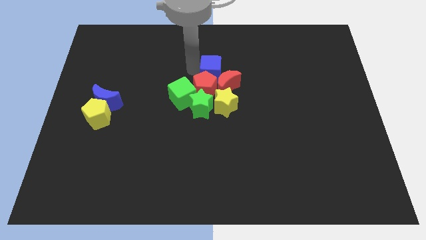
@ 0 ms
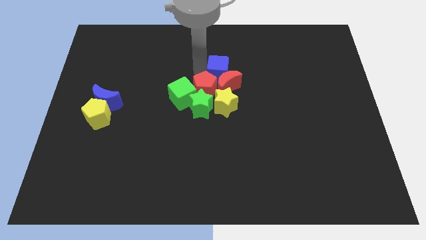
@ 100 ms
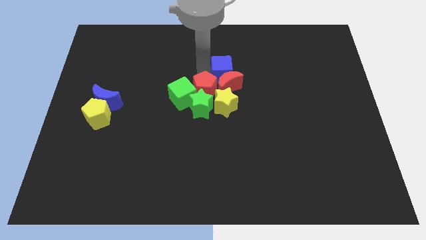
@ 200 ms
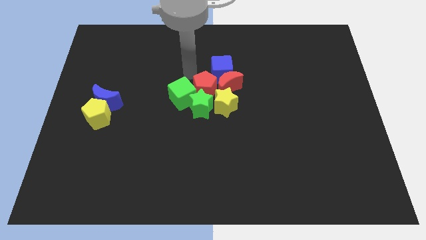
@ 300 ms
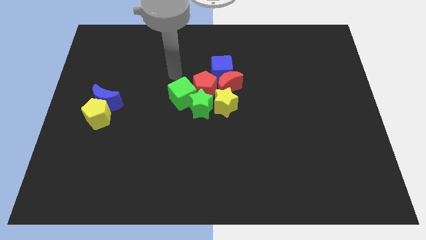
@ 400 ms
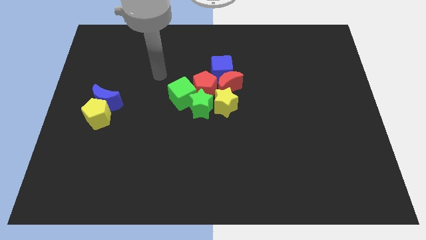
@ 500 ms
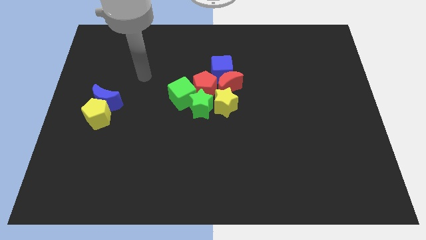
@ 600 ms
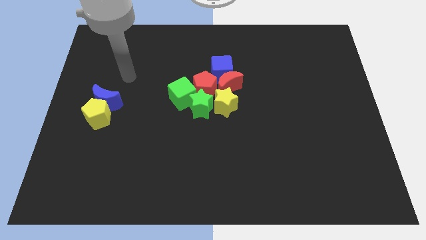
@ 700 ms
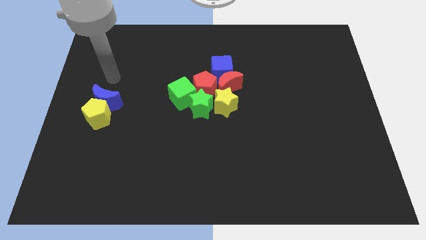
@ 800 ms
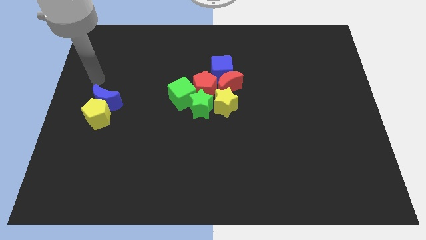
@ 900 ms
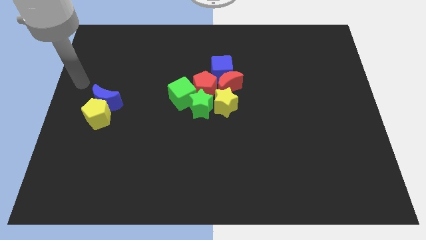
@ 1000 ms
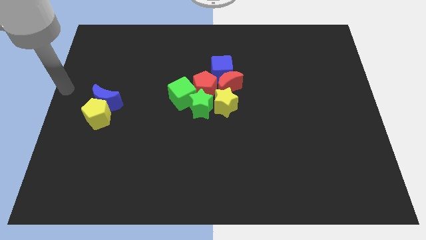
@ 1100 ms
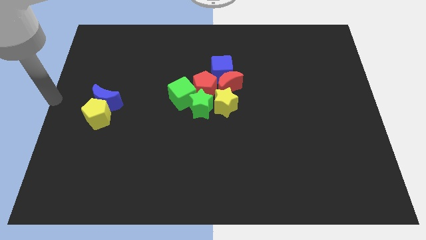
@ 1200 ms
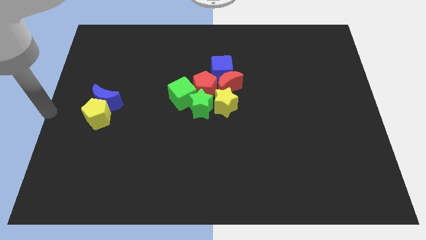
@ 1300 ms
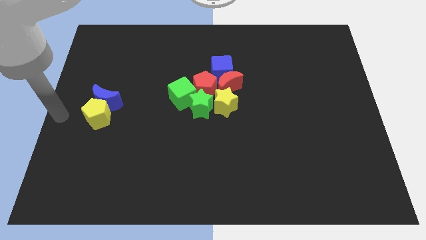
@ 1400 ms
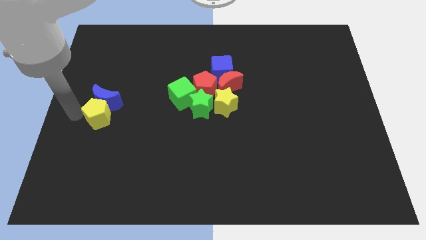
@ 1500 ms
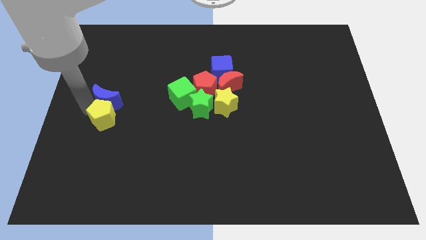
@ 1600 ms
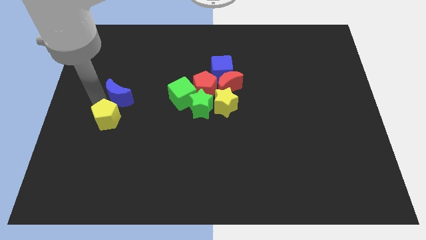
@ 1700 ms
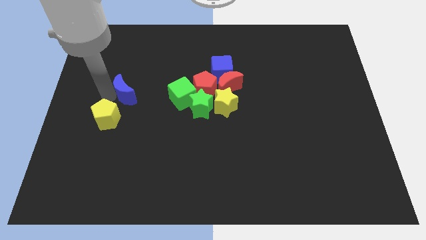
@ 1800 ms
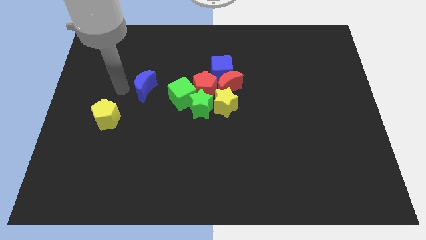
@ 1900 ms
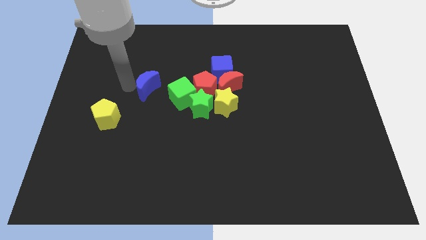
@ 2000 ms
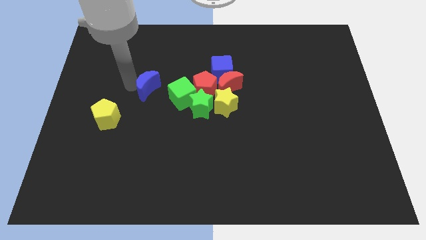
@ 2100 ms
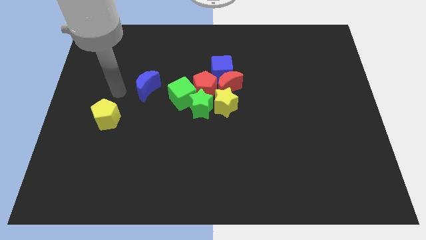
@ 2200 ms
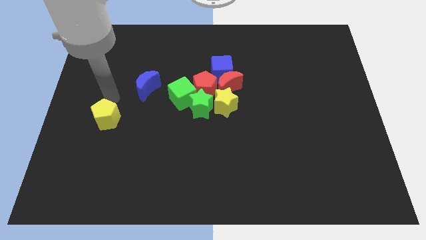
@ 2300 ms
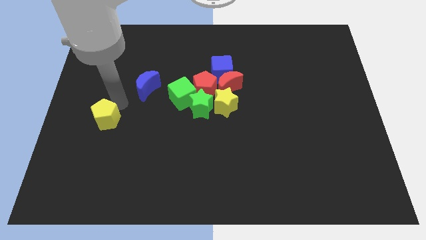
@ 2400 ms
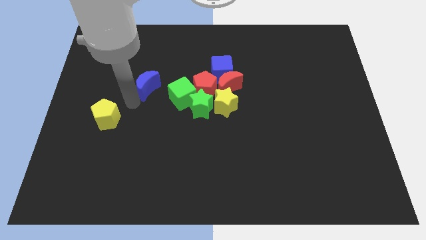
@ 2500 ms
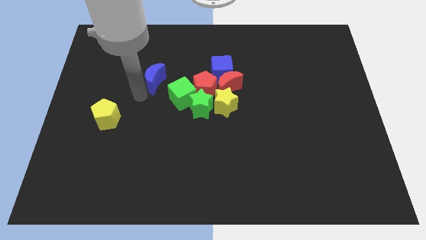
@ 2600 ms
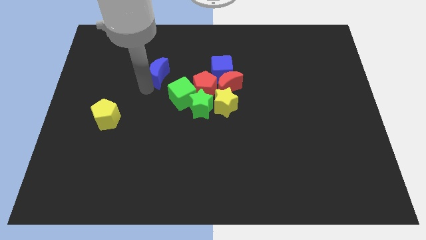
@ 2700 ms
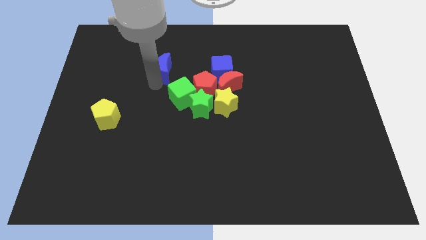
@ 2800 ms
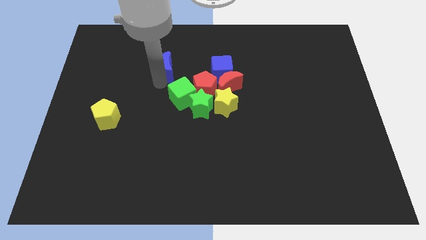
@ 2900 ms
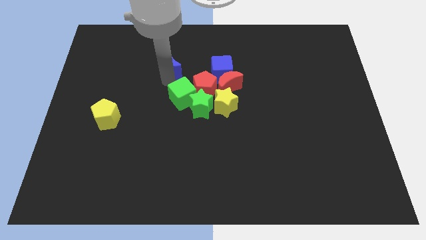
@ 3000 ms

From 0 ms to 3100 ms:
push the blue moon to the top side of the green cube

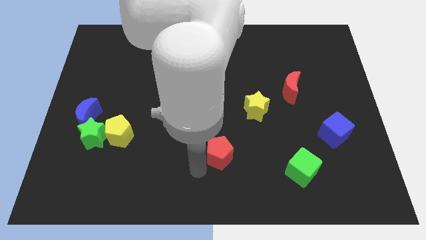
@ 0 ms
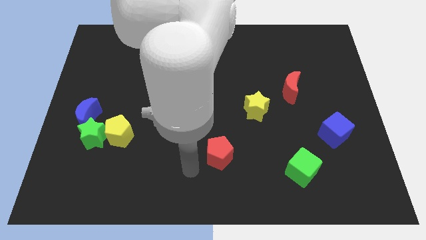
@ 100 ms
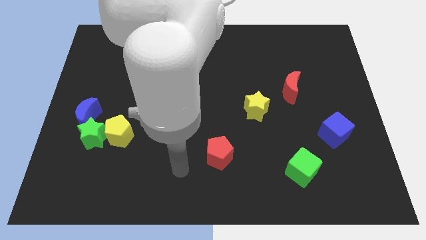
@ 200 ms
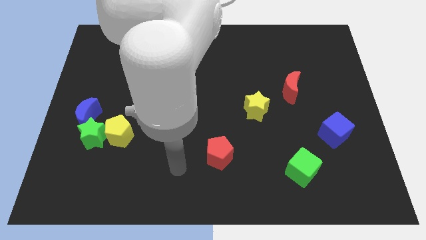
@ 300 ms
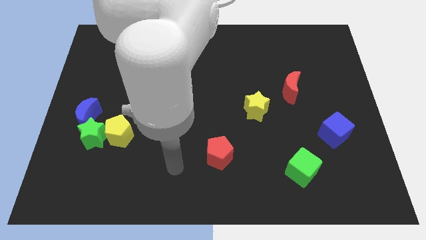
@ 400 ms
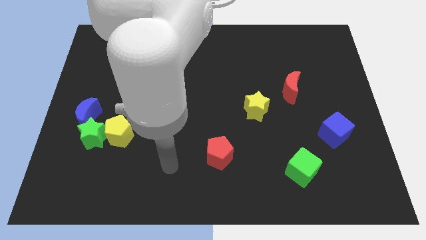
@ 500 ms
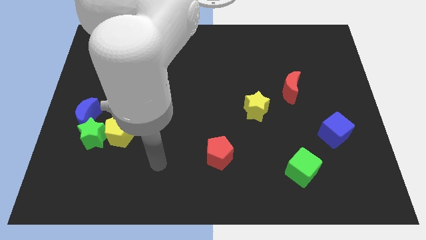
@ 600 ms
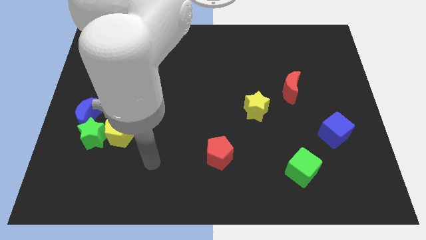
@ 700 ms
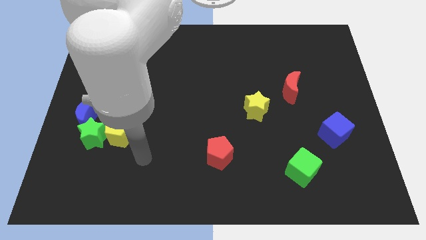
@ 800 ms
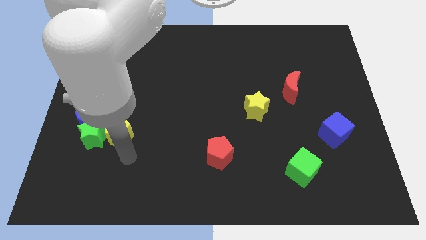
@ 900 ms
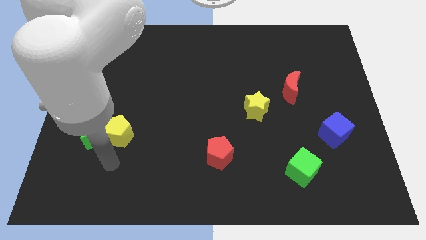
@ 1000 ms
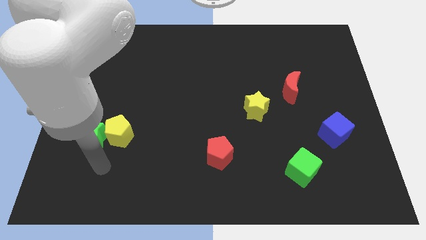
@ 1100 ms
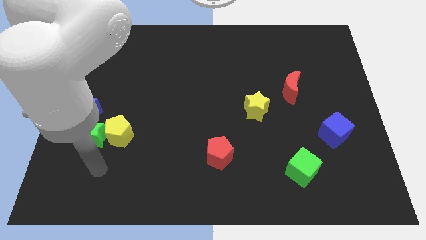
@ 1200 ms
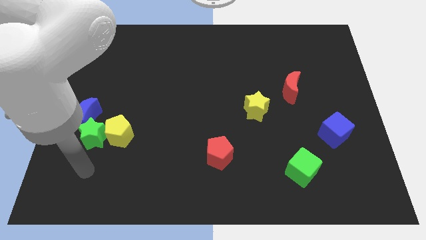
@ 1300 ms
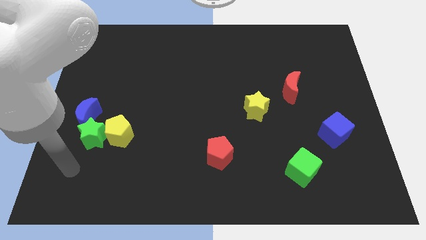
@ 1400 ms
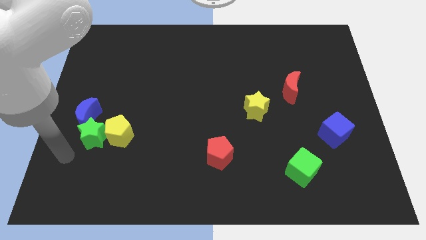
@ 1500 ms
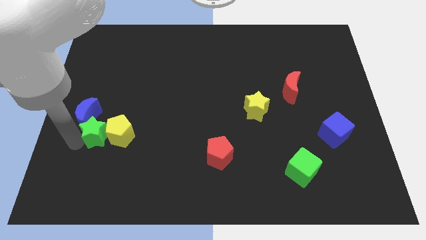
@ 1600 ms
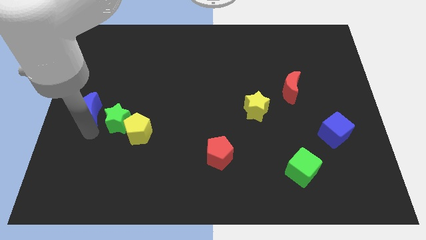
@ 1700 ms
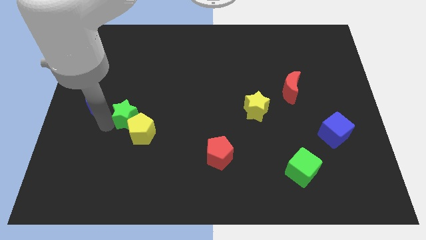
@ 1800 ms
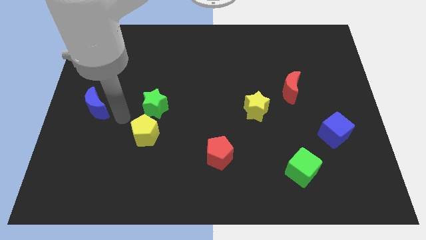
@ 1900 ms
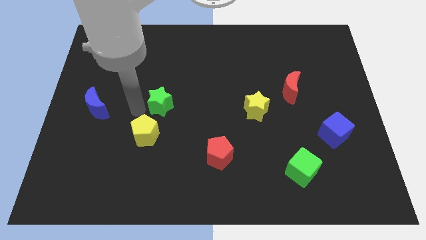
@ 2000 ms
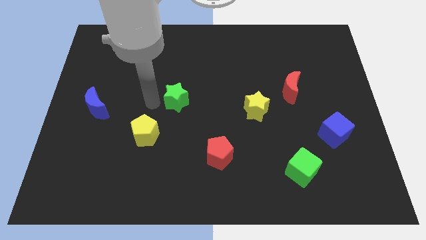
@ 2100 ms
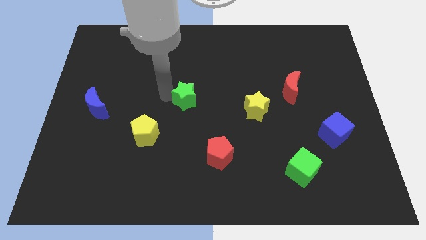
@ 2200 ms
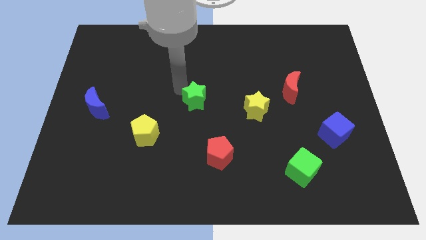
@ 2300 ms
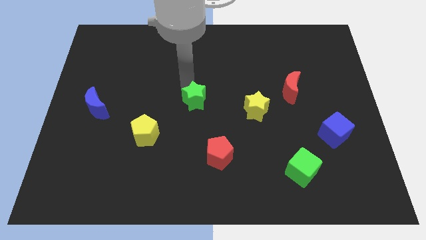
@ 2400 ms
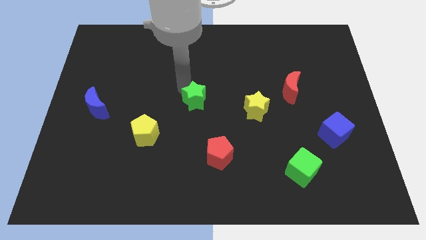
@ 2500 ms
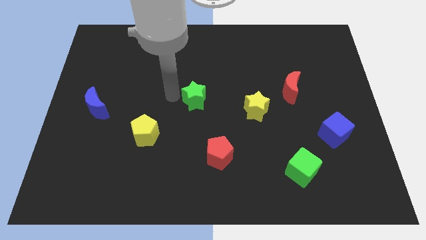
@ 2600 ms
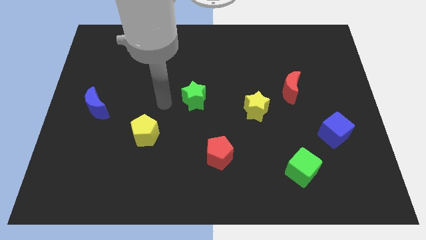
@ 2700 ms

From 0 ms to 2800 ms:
separate the green star from yellow pentagon

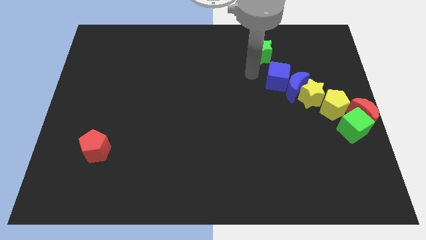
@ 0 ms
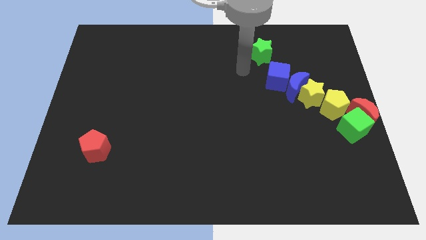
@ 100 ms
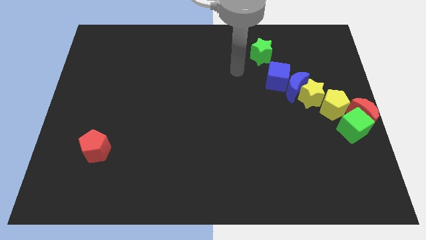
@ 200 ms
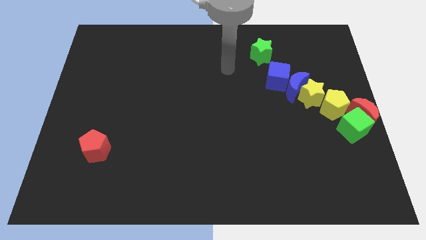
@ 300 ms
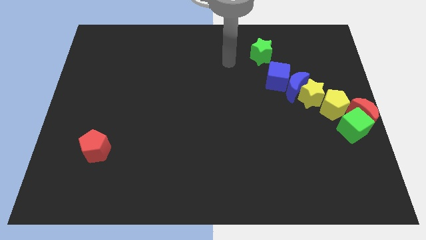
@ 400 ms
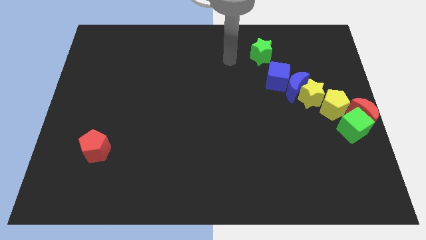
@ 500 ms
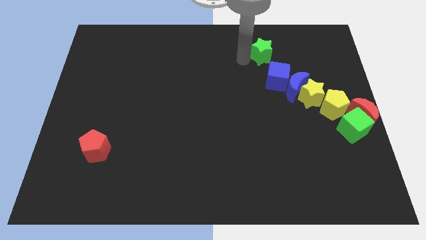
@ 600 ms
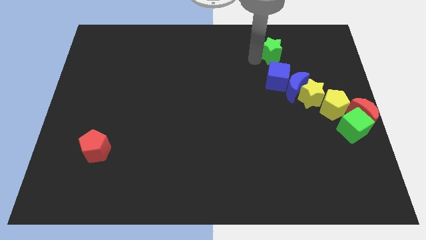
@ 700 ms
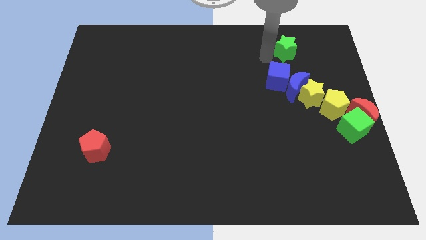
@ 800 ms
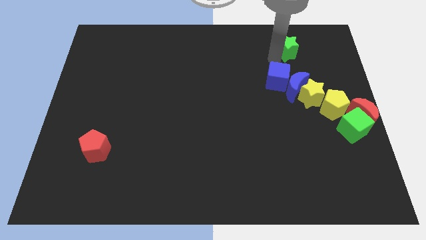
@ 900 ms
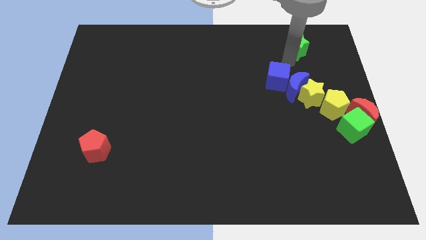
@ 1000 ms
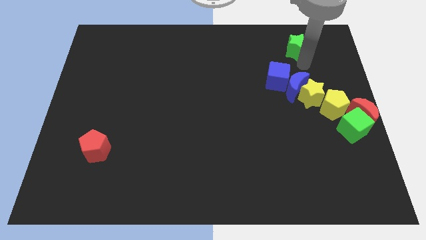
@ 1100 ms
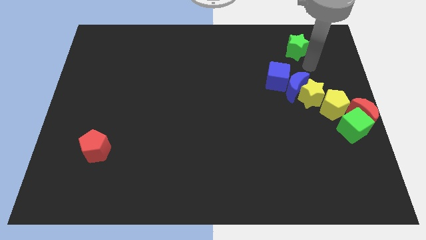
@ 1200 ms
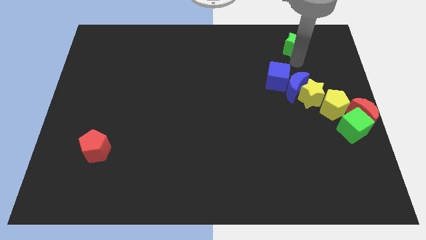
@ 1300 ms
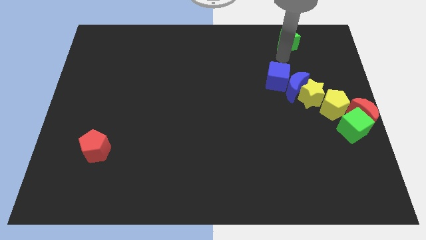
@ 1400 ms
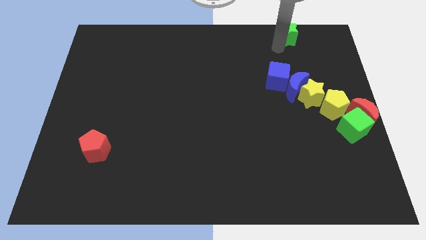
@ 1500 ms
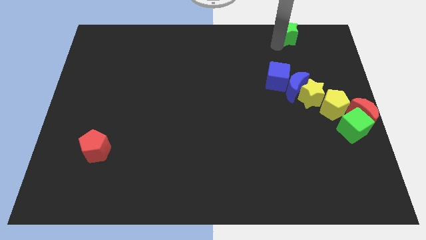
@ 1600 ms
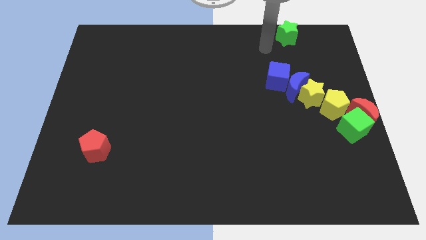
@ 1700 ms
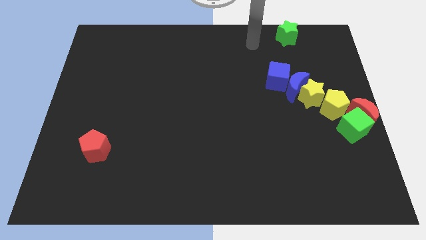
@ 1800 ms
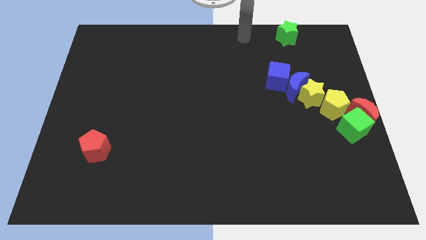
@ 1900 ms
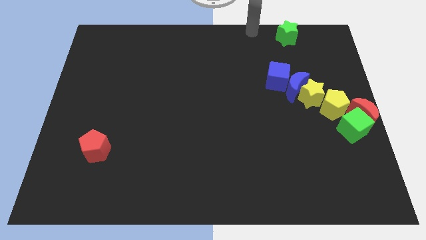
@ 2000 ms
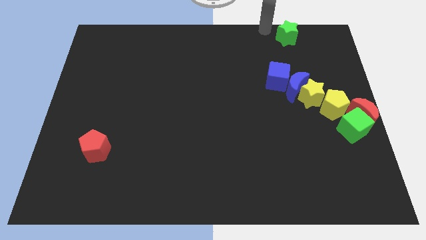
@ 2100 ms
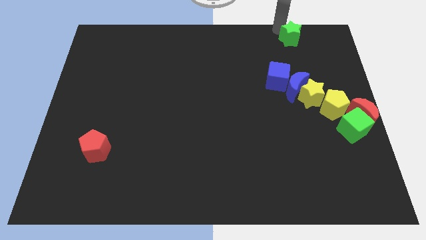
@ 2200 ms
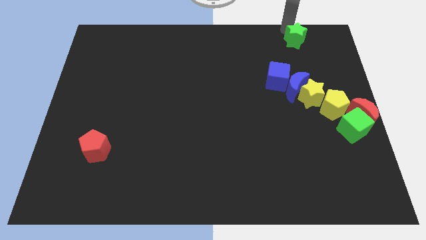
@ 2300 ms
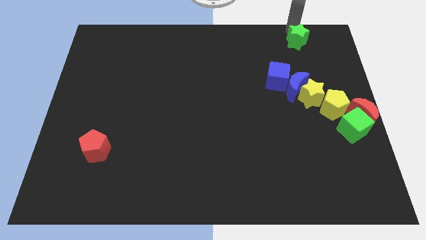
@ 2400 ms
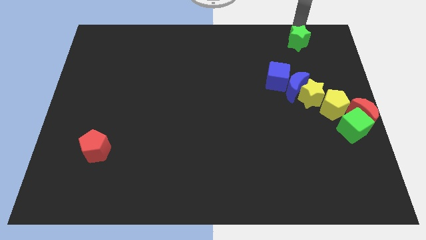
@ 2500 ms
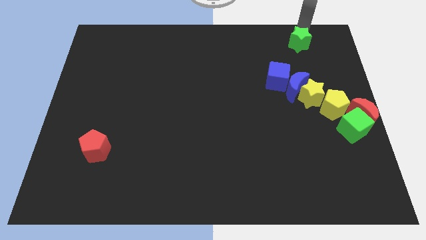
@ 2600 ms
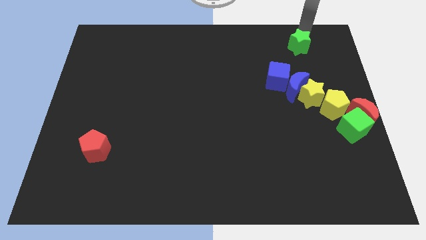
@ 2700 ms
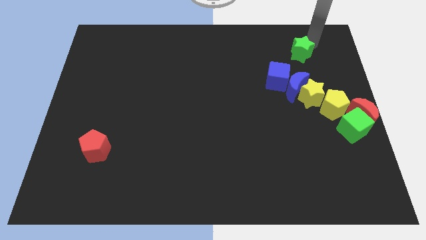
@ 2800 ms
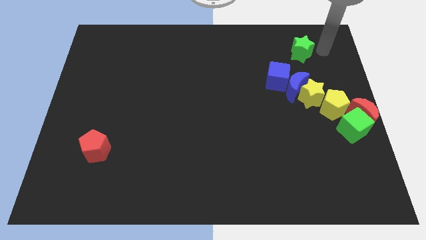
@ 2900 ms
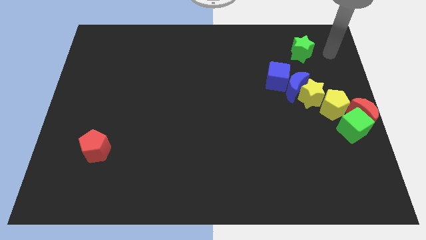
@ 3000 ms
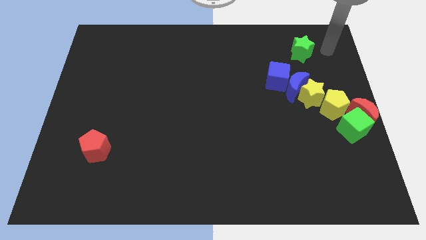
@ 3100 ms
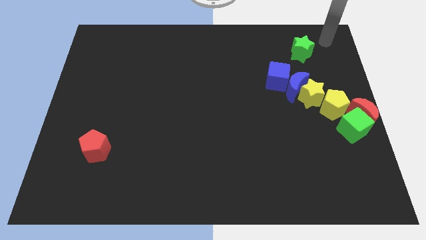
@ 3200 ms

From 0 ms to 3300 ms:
place the green star vertically at the top side of the blue crescent
